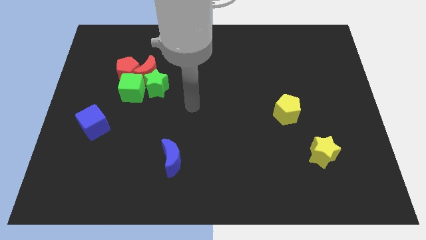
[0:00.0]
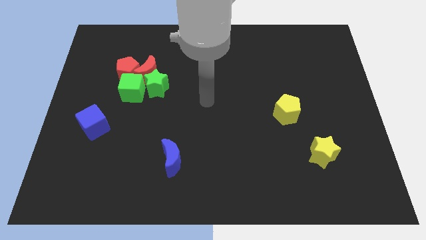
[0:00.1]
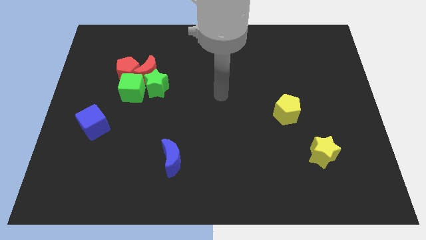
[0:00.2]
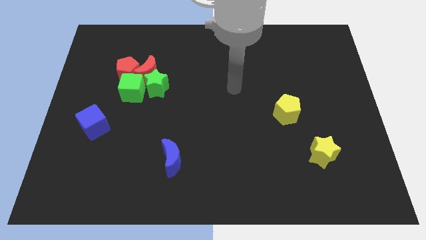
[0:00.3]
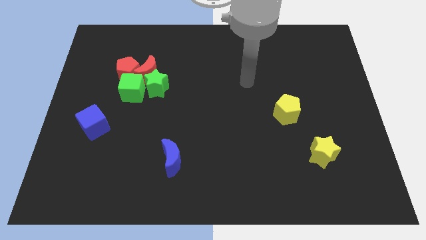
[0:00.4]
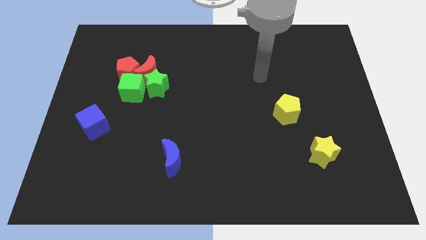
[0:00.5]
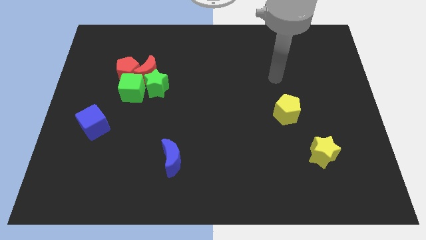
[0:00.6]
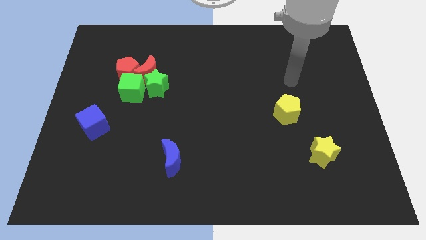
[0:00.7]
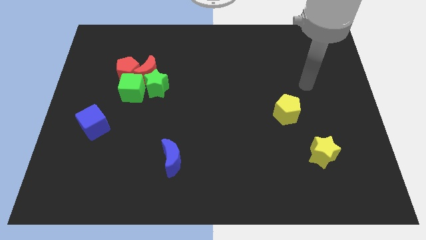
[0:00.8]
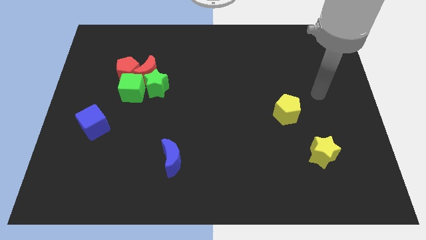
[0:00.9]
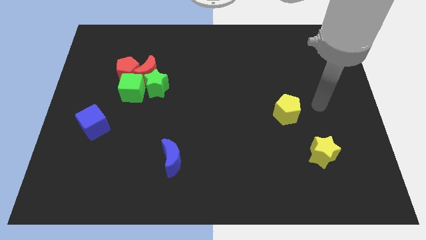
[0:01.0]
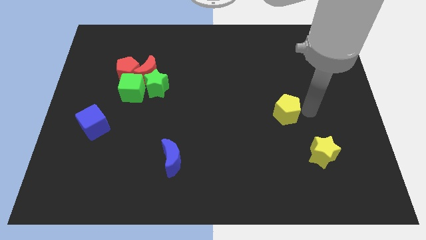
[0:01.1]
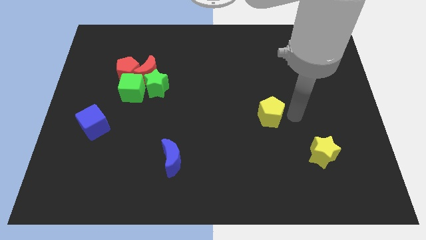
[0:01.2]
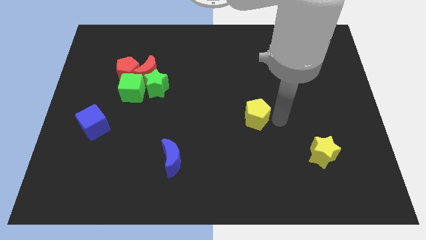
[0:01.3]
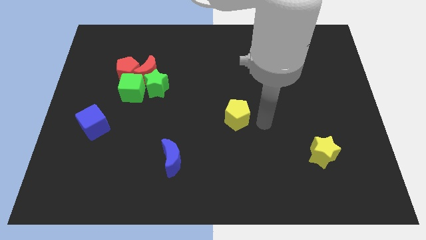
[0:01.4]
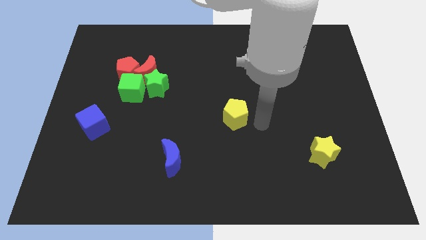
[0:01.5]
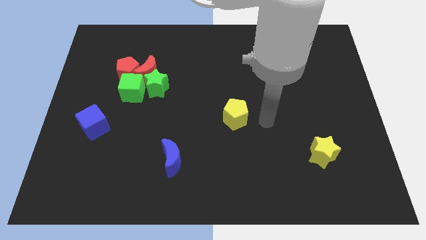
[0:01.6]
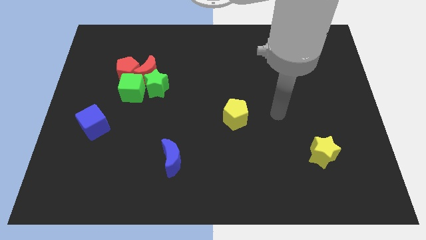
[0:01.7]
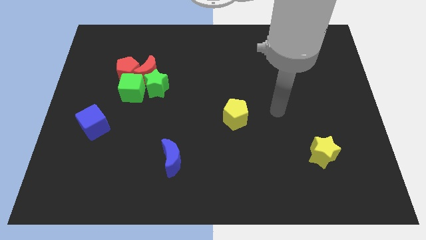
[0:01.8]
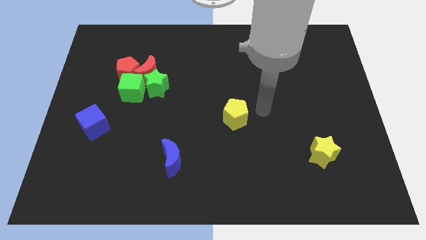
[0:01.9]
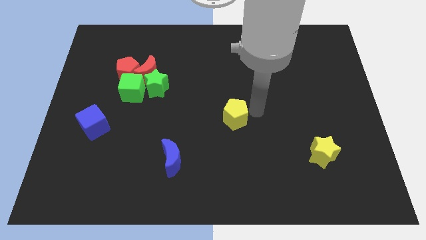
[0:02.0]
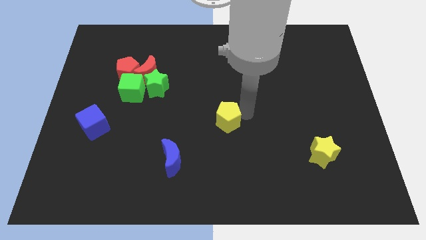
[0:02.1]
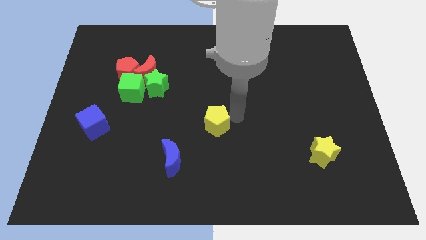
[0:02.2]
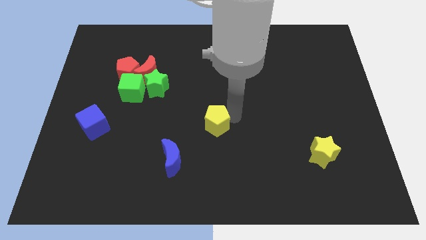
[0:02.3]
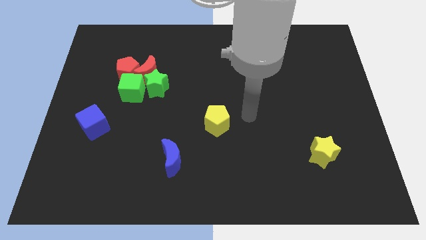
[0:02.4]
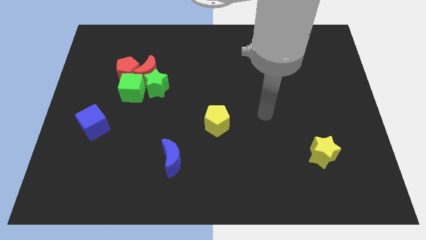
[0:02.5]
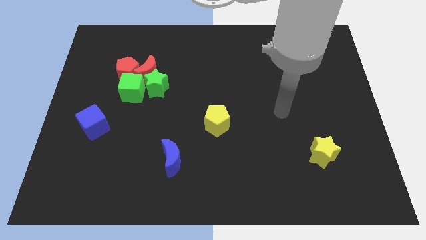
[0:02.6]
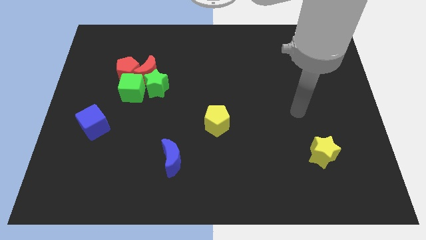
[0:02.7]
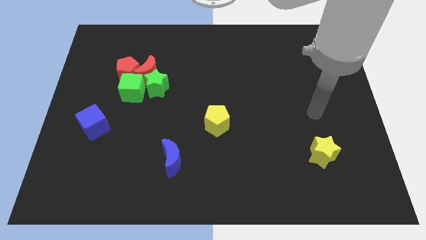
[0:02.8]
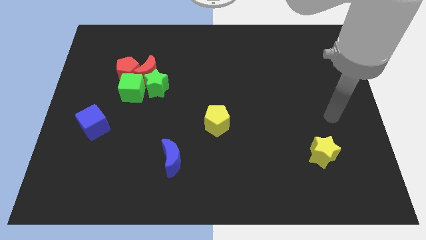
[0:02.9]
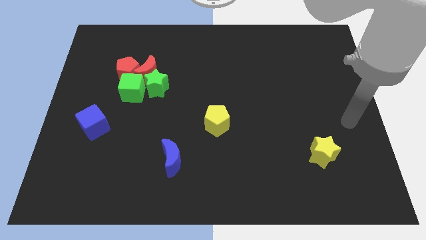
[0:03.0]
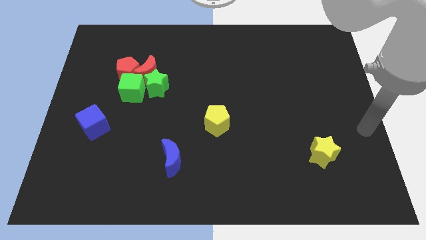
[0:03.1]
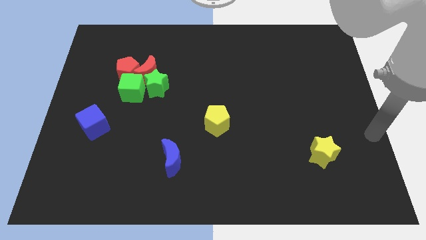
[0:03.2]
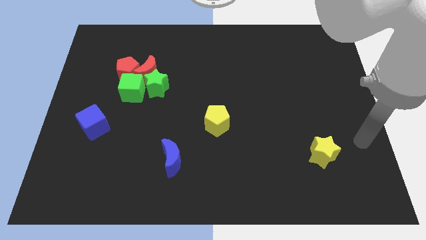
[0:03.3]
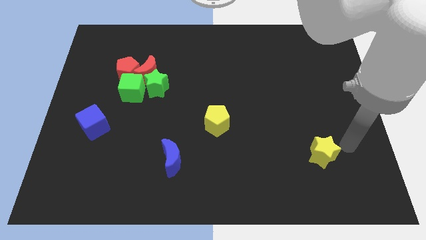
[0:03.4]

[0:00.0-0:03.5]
move yellow pentagon in the center

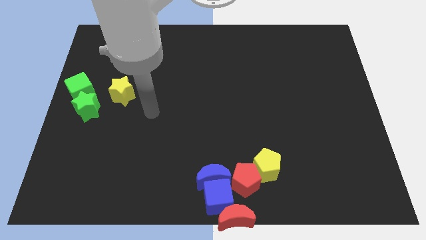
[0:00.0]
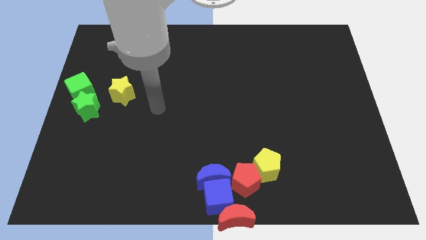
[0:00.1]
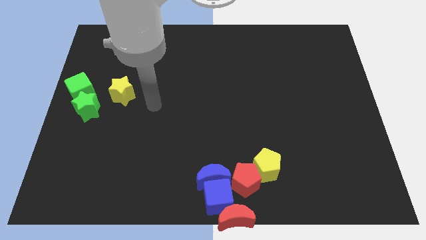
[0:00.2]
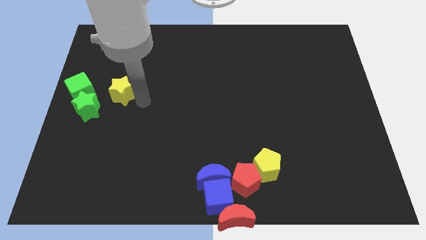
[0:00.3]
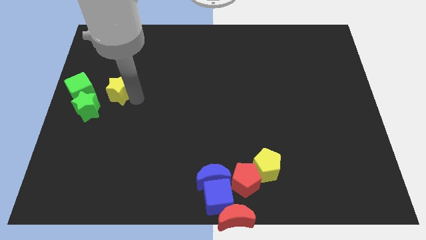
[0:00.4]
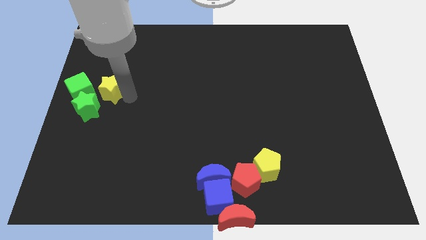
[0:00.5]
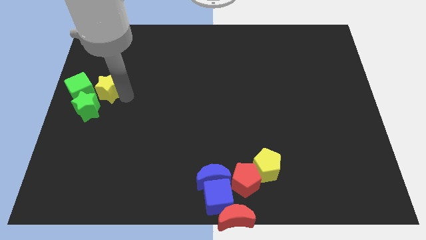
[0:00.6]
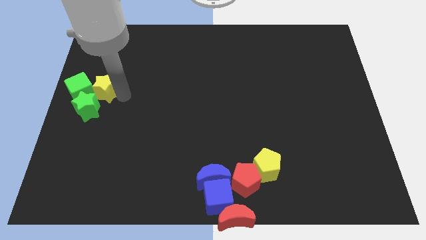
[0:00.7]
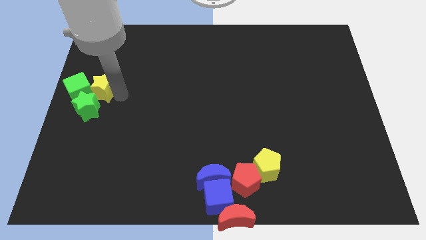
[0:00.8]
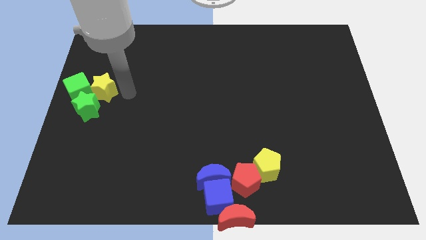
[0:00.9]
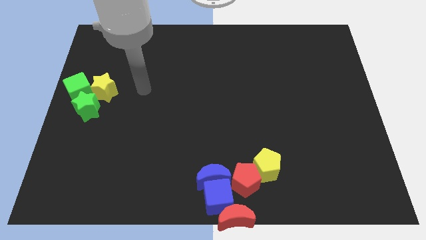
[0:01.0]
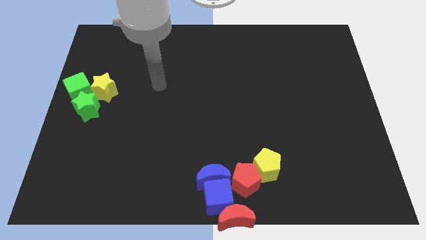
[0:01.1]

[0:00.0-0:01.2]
push the yellow star into the green cube

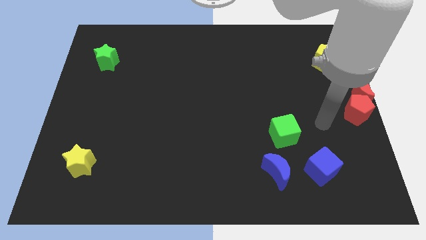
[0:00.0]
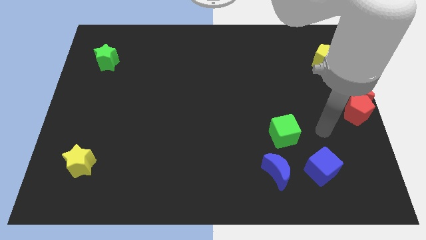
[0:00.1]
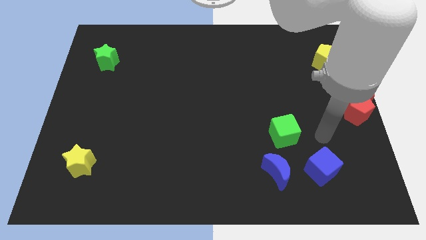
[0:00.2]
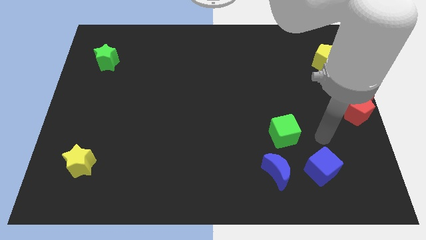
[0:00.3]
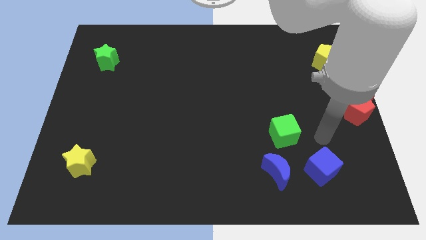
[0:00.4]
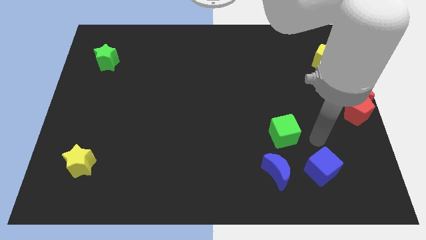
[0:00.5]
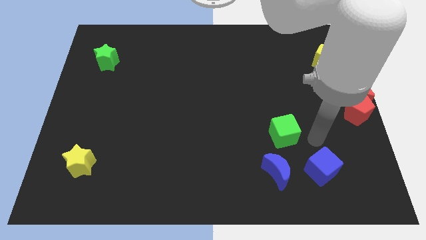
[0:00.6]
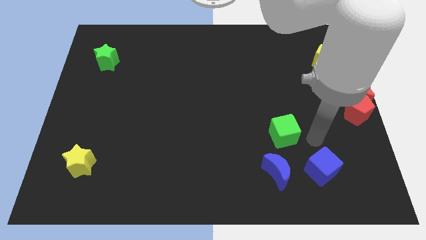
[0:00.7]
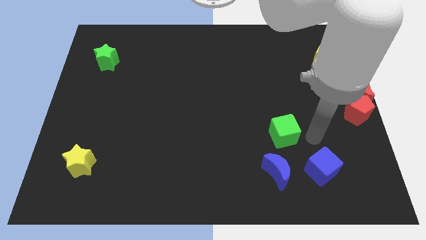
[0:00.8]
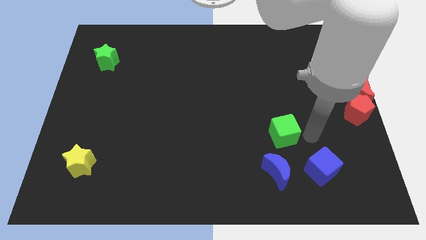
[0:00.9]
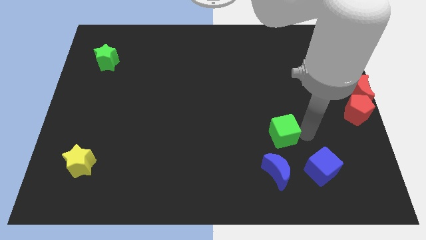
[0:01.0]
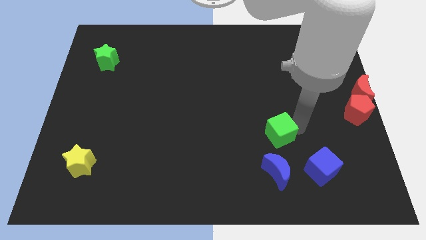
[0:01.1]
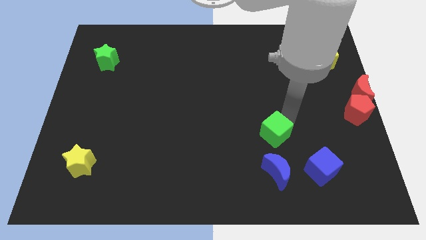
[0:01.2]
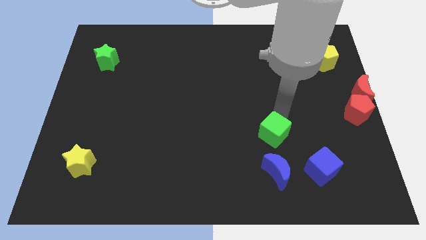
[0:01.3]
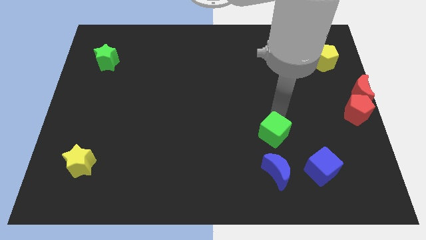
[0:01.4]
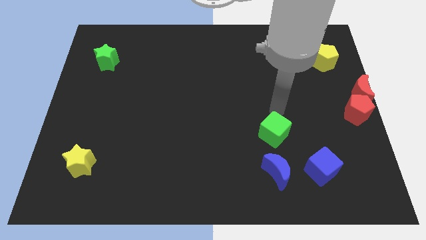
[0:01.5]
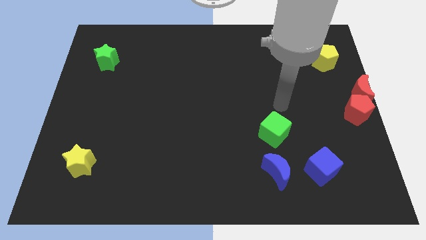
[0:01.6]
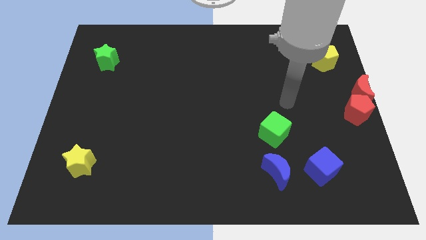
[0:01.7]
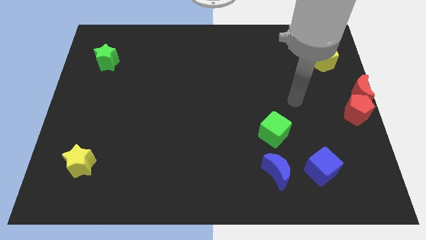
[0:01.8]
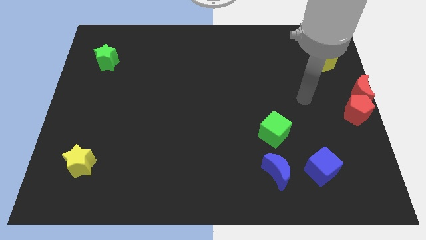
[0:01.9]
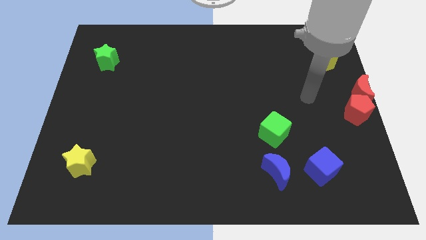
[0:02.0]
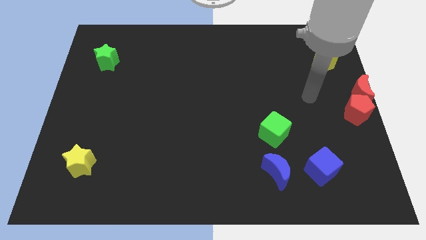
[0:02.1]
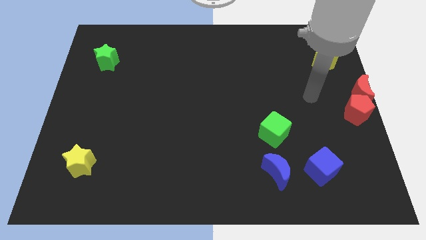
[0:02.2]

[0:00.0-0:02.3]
move the green cube slightly to the left

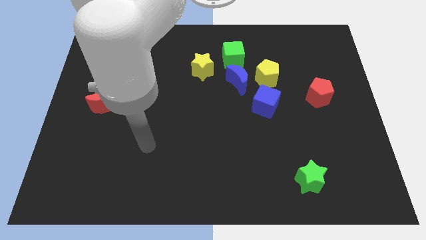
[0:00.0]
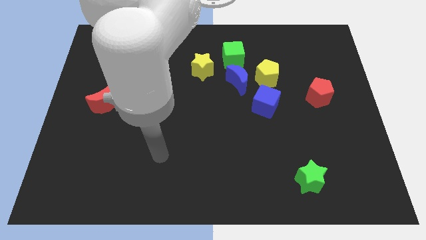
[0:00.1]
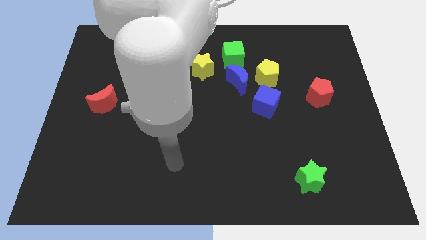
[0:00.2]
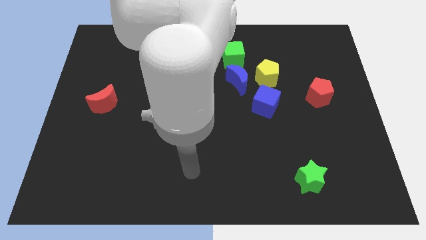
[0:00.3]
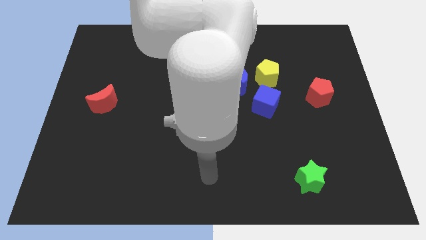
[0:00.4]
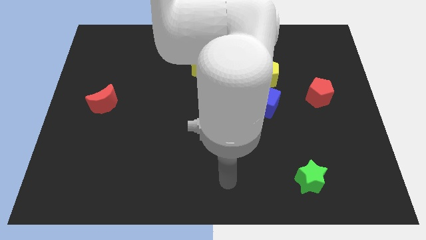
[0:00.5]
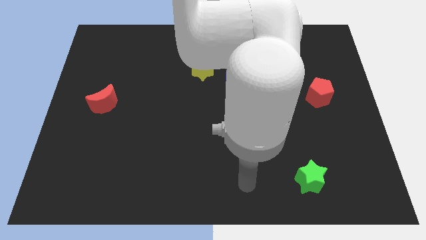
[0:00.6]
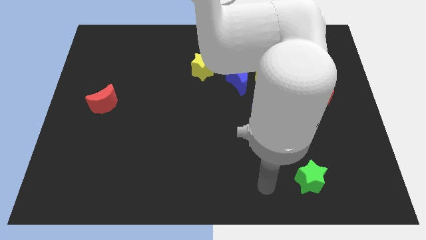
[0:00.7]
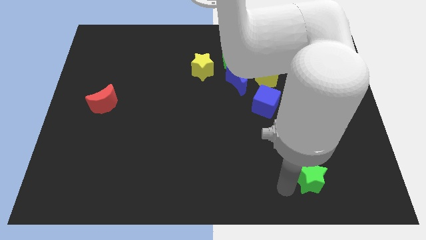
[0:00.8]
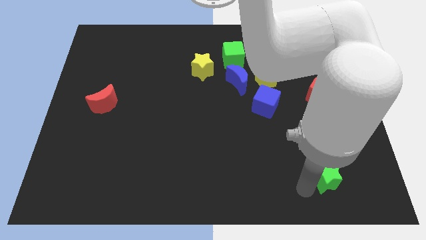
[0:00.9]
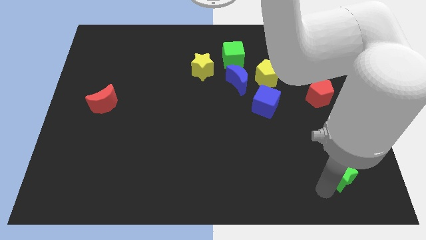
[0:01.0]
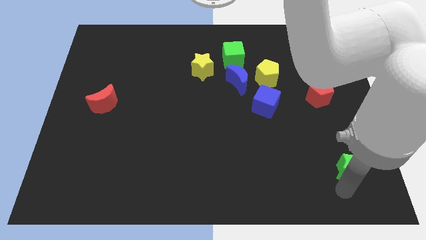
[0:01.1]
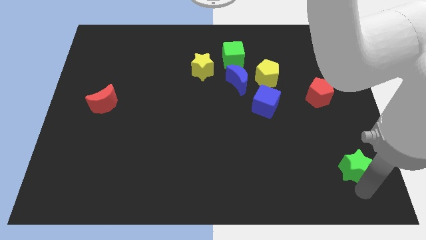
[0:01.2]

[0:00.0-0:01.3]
move the green star slightly to the right side of the table

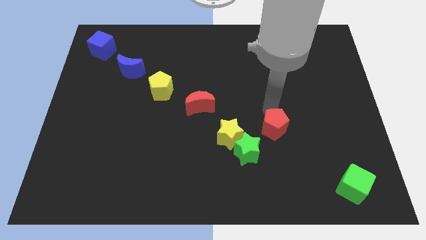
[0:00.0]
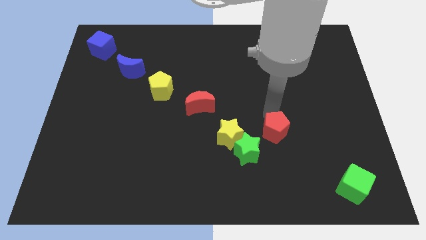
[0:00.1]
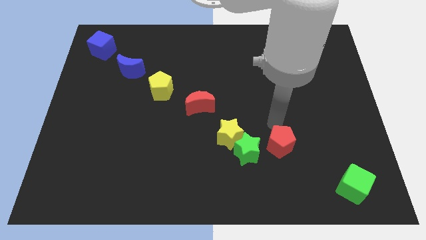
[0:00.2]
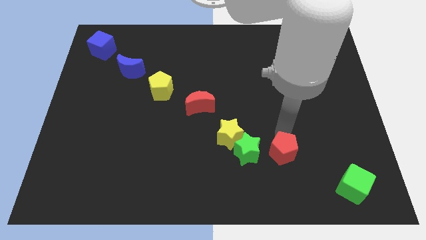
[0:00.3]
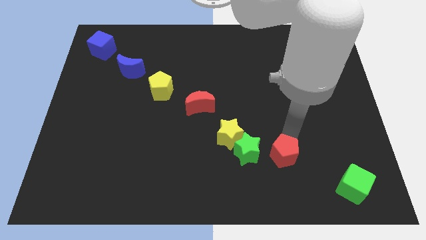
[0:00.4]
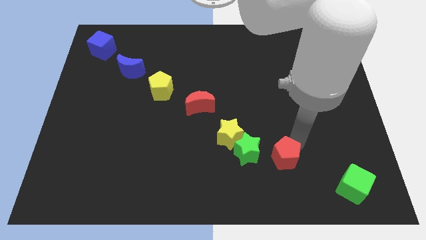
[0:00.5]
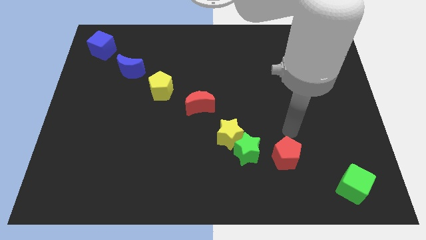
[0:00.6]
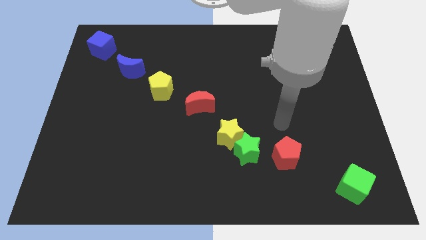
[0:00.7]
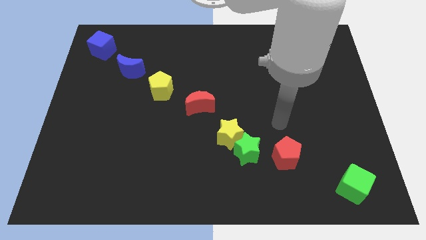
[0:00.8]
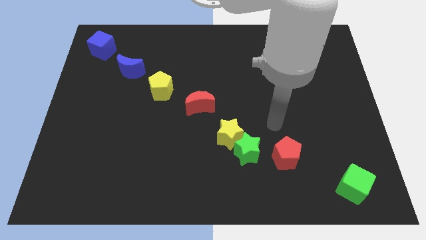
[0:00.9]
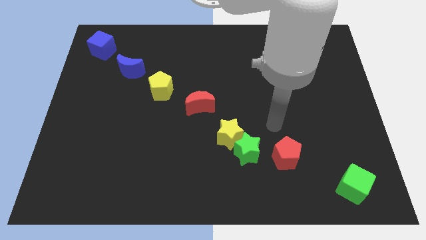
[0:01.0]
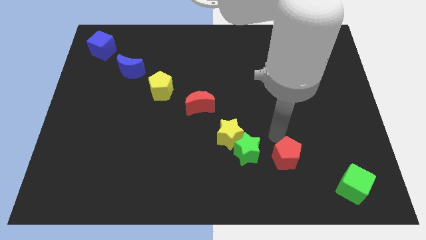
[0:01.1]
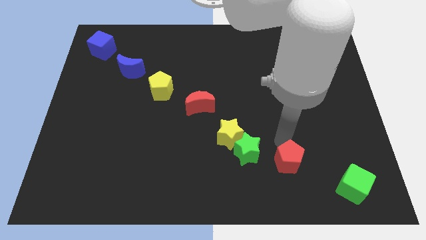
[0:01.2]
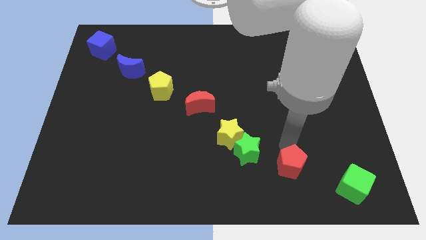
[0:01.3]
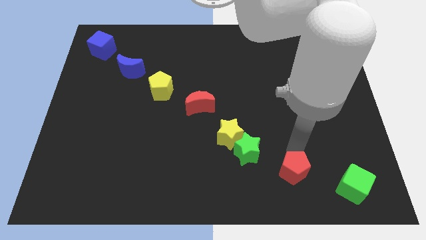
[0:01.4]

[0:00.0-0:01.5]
move the red pentagon towards the green cube
